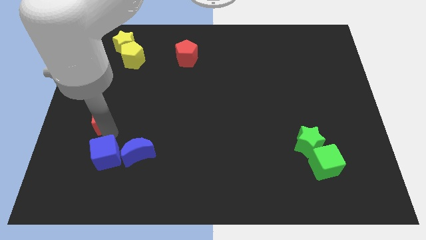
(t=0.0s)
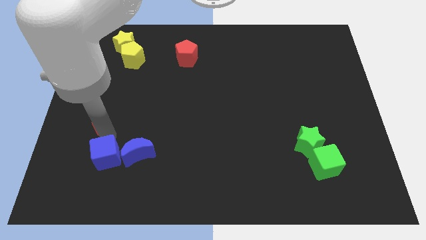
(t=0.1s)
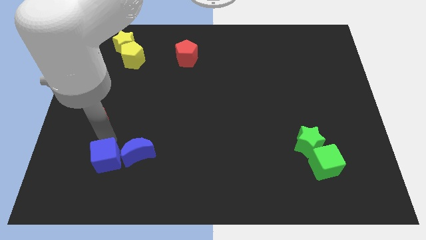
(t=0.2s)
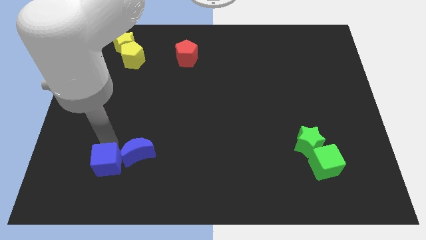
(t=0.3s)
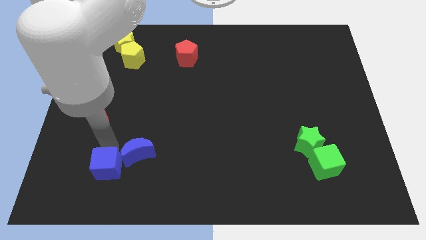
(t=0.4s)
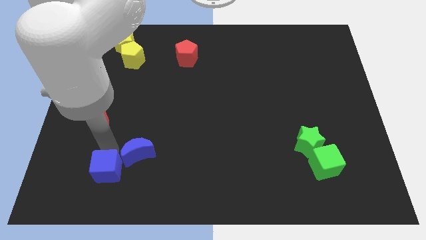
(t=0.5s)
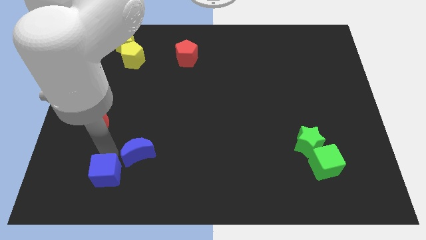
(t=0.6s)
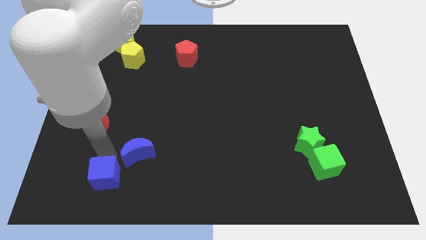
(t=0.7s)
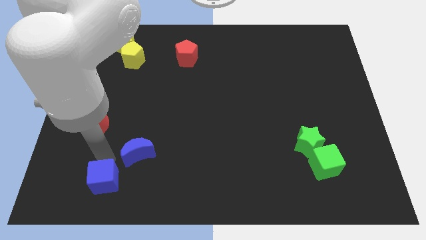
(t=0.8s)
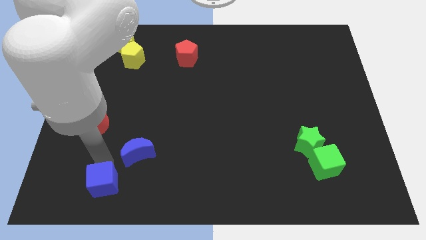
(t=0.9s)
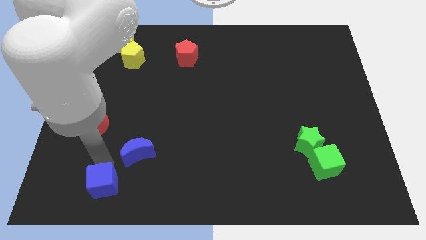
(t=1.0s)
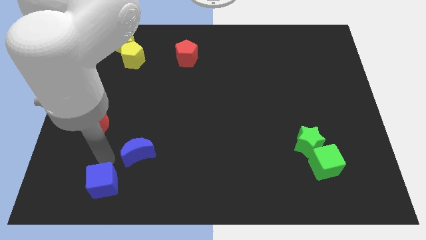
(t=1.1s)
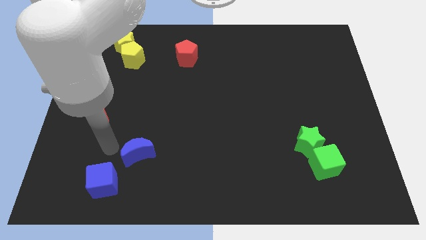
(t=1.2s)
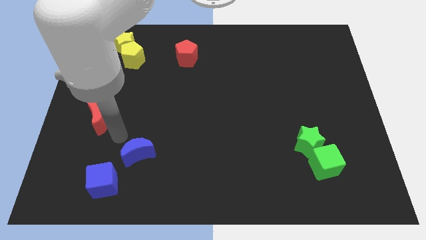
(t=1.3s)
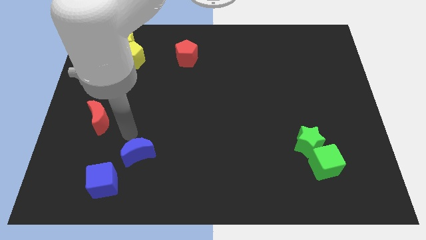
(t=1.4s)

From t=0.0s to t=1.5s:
separate blue cube from red moon

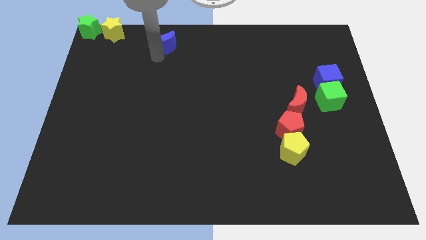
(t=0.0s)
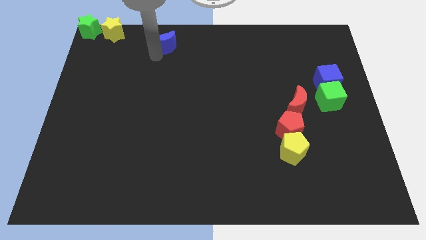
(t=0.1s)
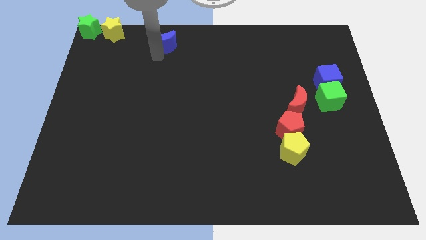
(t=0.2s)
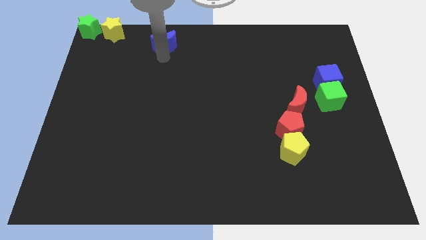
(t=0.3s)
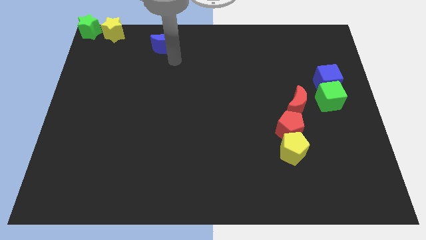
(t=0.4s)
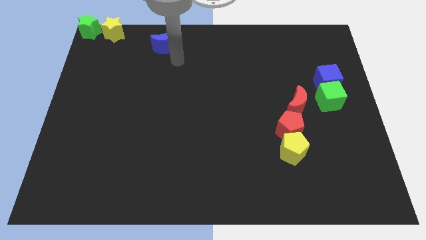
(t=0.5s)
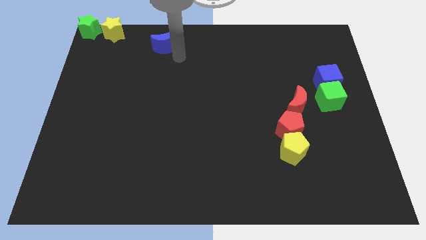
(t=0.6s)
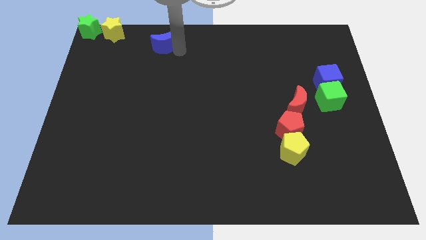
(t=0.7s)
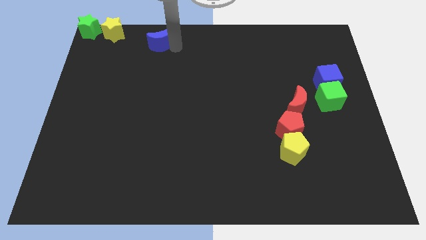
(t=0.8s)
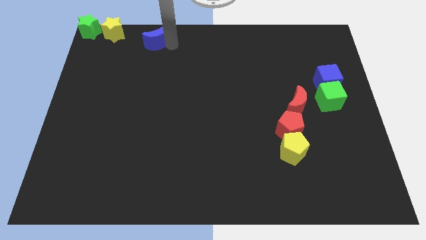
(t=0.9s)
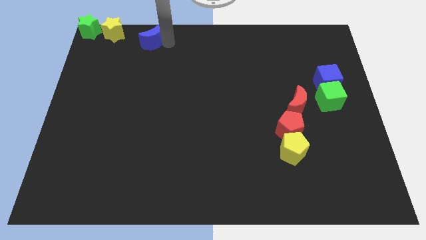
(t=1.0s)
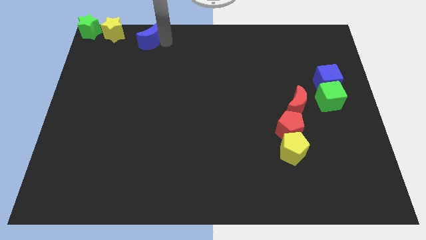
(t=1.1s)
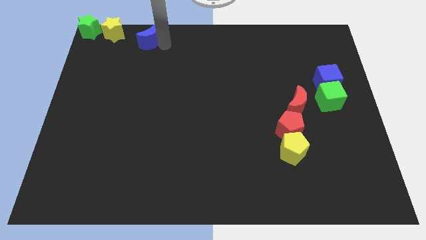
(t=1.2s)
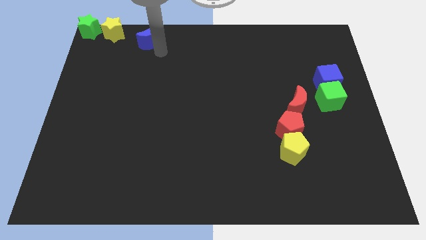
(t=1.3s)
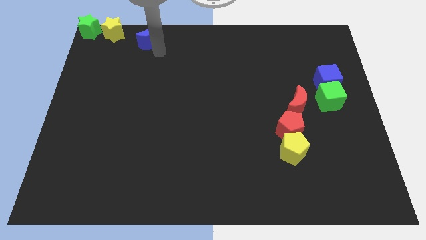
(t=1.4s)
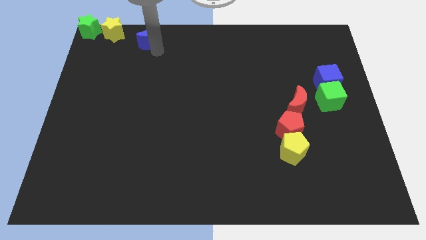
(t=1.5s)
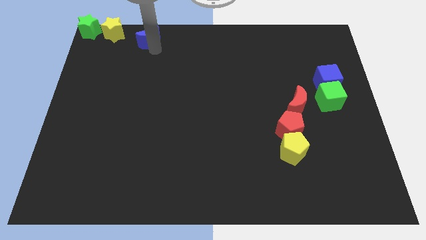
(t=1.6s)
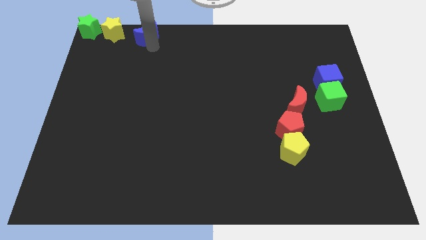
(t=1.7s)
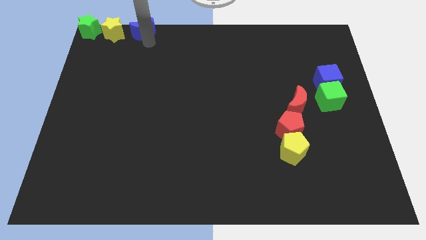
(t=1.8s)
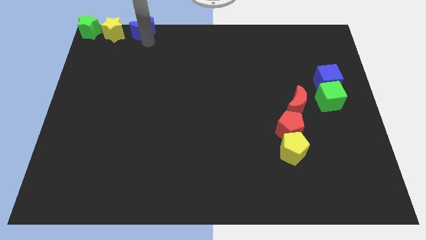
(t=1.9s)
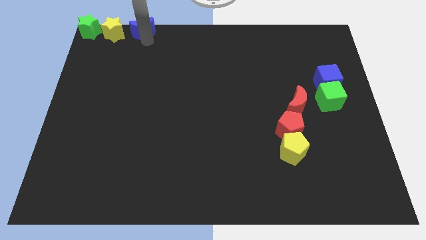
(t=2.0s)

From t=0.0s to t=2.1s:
place the blue moon to the right of the horizontal line of stars

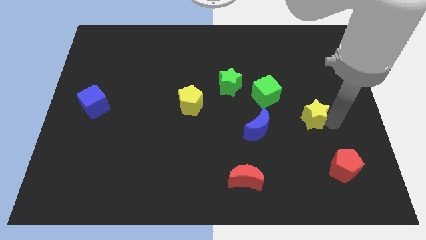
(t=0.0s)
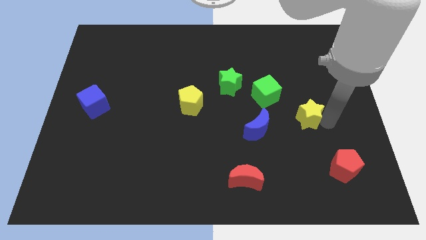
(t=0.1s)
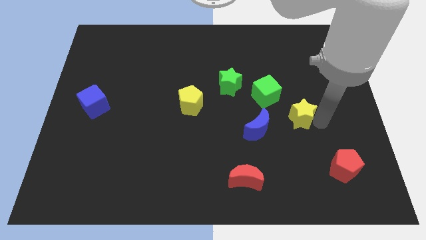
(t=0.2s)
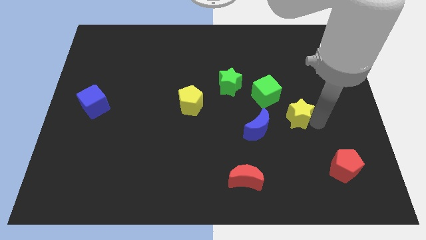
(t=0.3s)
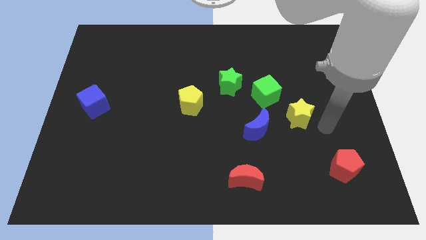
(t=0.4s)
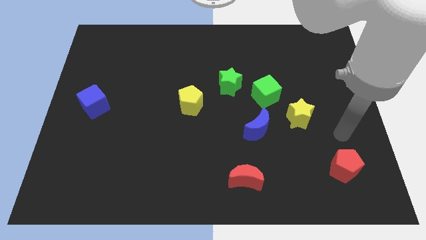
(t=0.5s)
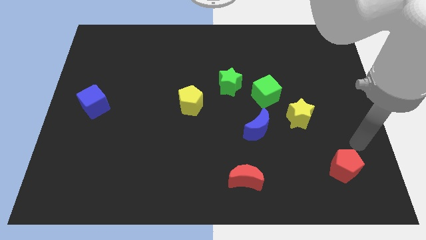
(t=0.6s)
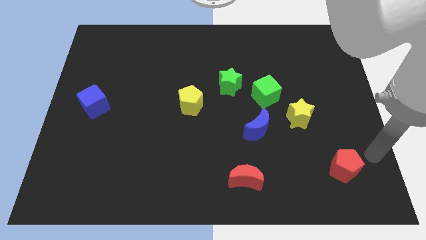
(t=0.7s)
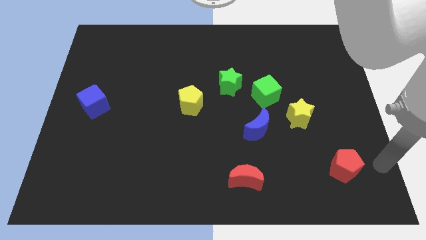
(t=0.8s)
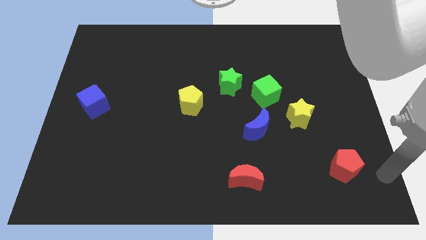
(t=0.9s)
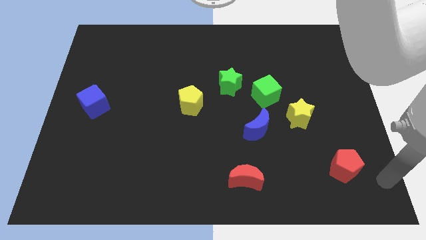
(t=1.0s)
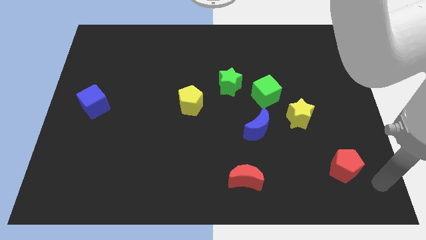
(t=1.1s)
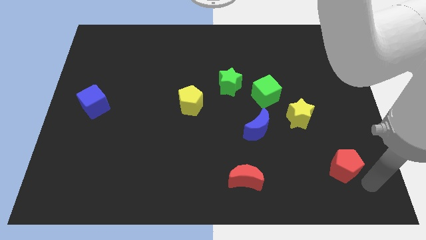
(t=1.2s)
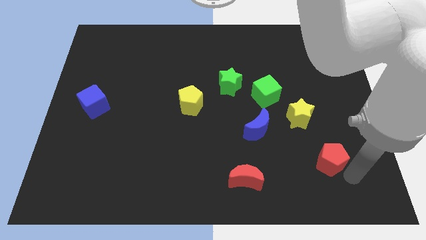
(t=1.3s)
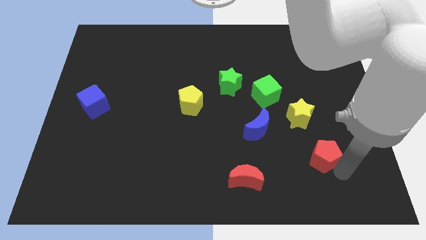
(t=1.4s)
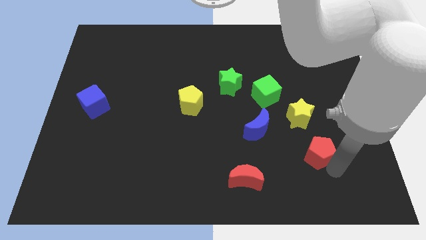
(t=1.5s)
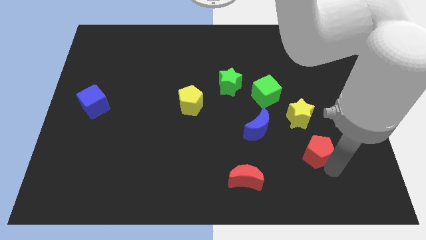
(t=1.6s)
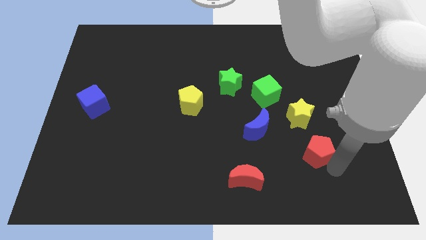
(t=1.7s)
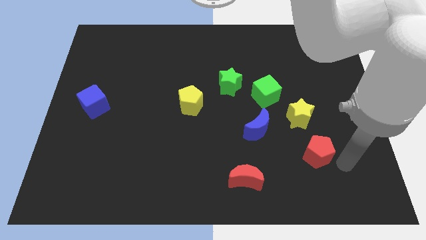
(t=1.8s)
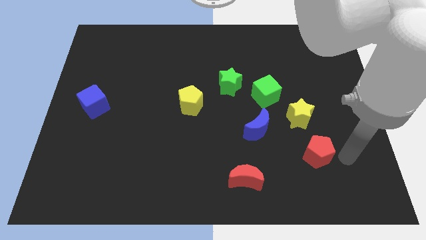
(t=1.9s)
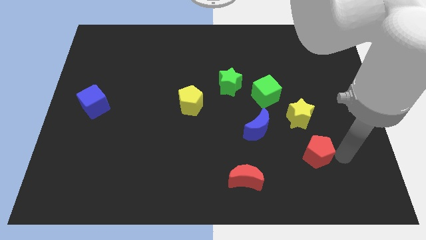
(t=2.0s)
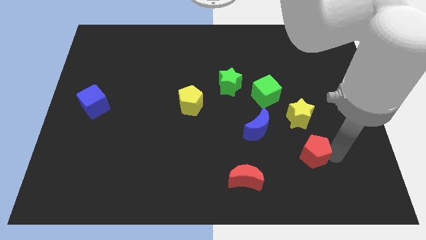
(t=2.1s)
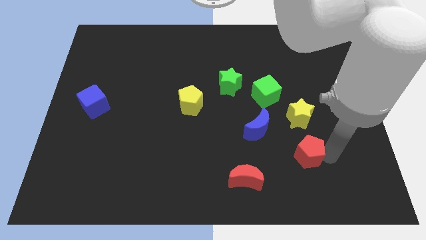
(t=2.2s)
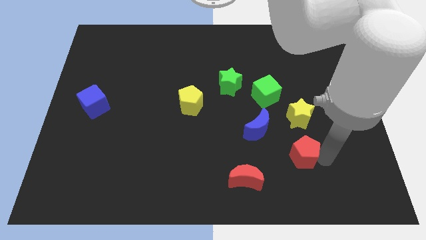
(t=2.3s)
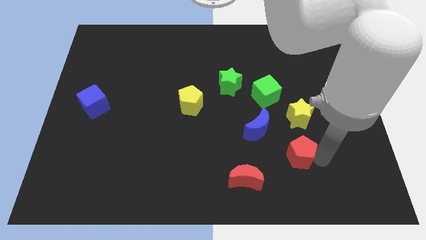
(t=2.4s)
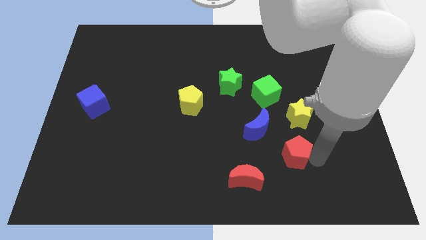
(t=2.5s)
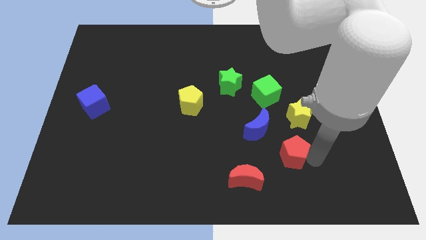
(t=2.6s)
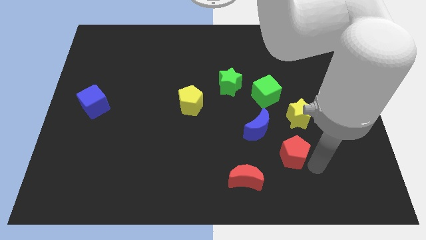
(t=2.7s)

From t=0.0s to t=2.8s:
push the red pentagon below the yellow star

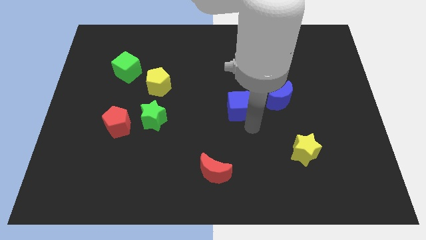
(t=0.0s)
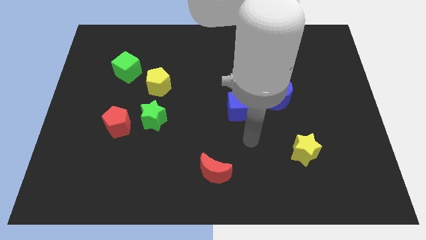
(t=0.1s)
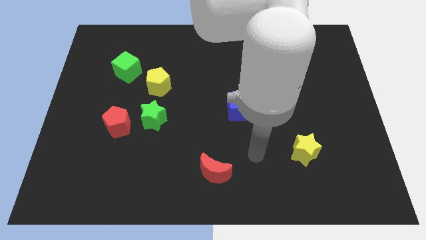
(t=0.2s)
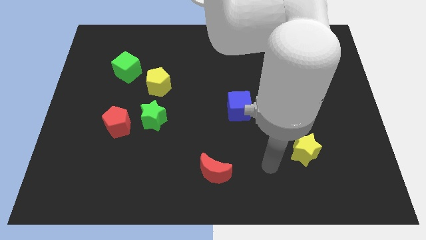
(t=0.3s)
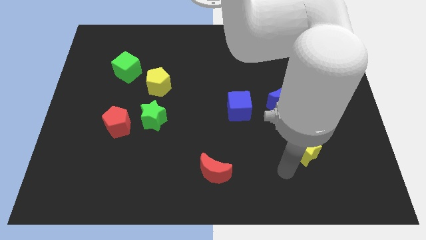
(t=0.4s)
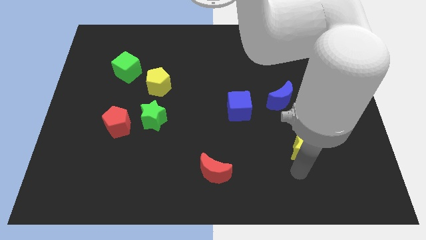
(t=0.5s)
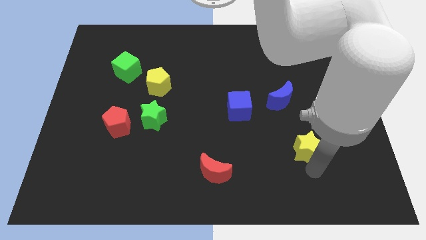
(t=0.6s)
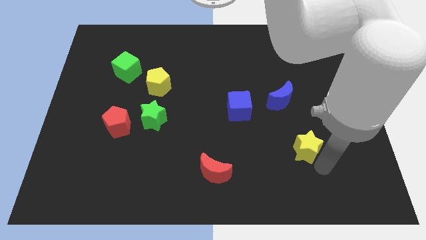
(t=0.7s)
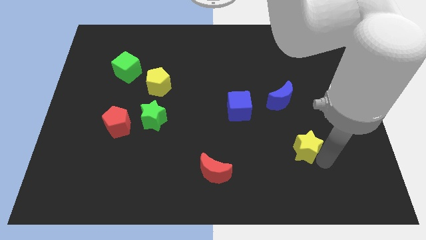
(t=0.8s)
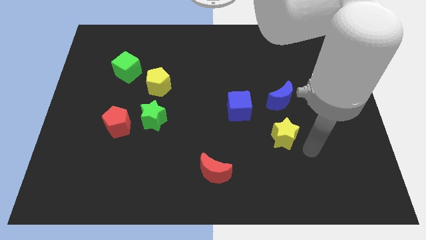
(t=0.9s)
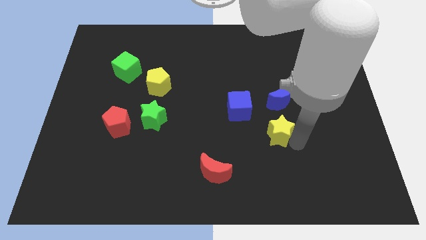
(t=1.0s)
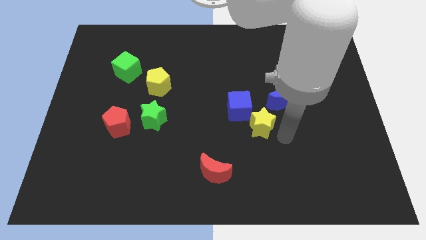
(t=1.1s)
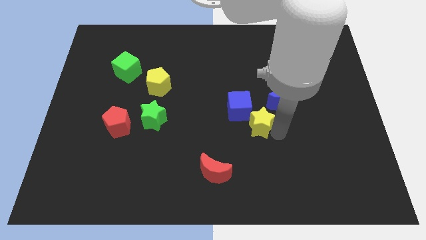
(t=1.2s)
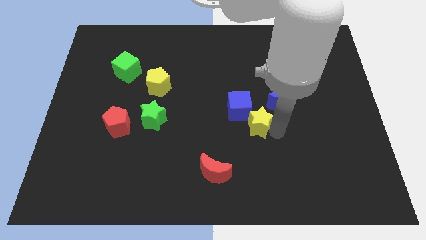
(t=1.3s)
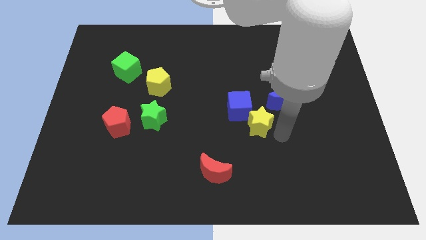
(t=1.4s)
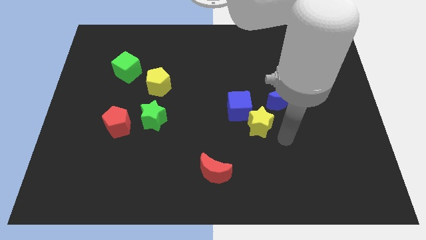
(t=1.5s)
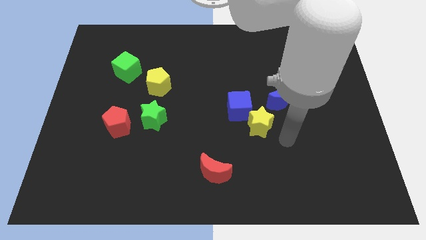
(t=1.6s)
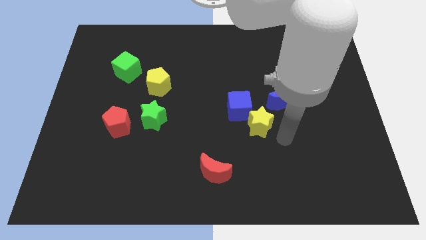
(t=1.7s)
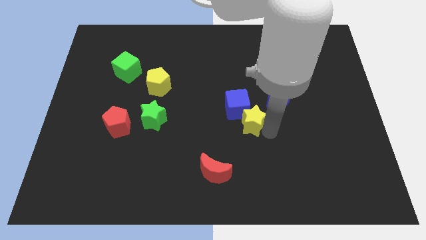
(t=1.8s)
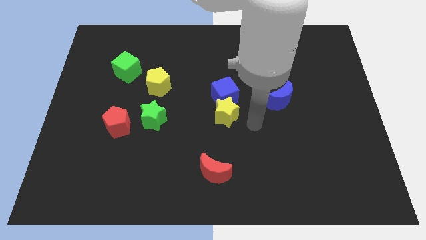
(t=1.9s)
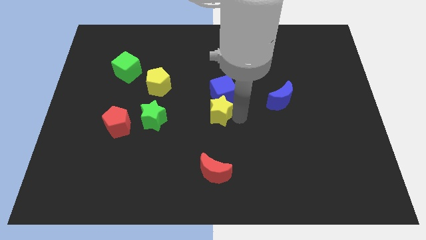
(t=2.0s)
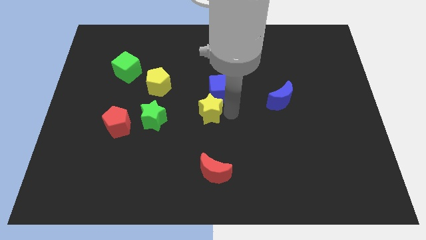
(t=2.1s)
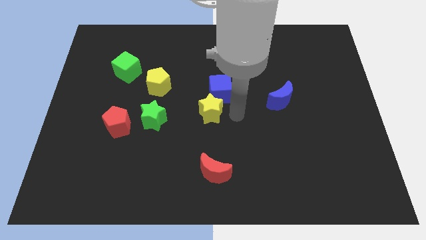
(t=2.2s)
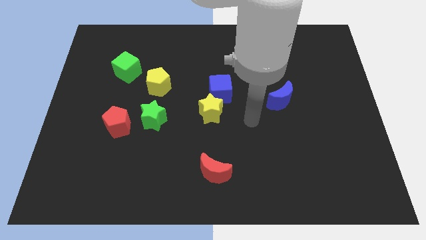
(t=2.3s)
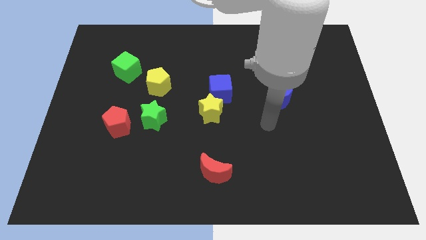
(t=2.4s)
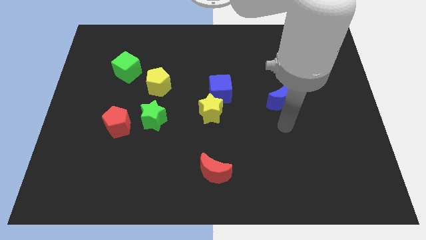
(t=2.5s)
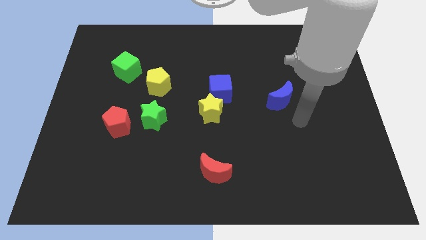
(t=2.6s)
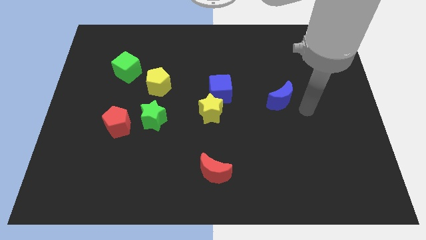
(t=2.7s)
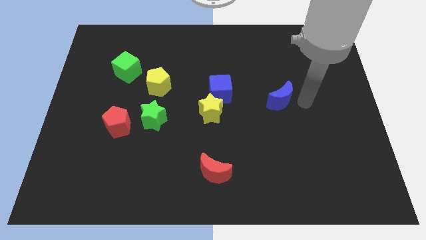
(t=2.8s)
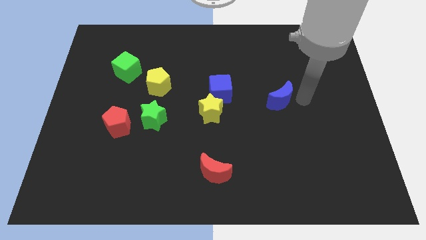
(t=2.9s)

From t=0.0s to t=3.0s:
push the yellow star along the blue cube to the center of the board
